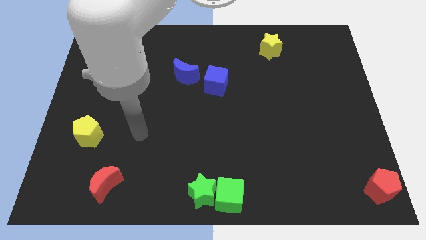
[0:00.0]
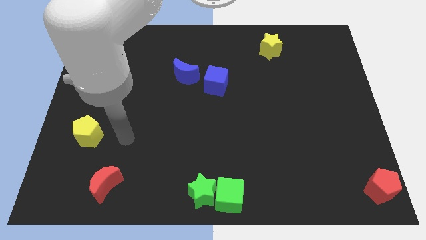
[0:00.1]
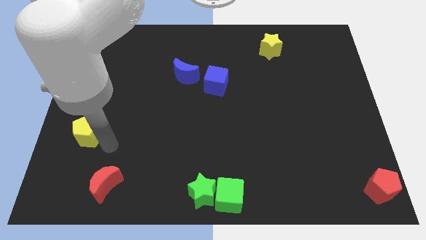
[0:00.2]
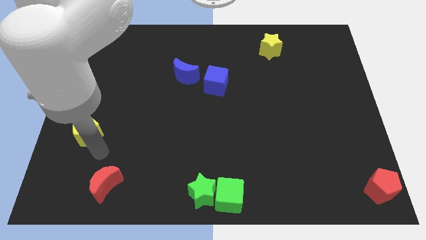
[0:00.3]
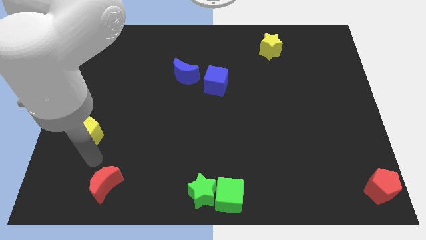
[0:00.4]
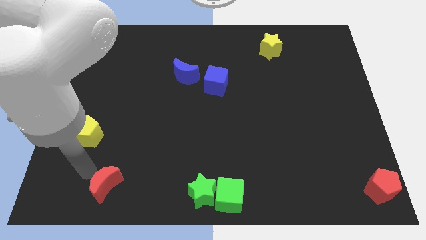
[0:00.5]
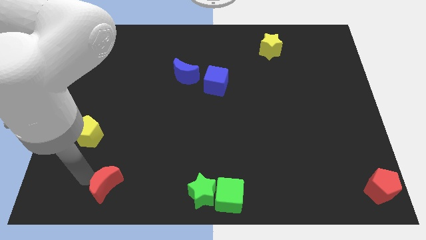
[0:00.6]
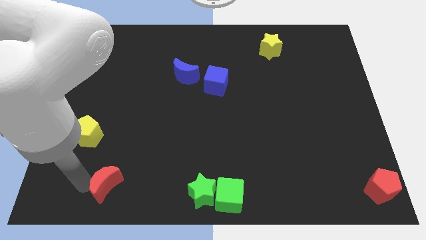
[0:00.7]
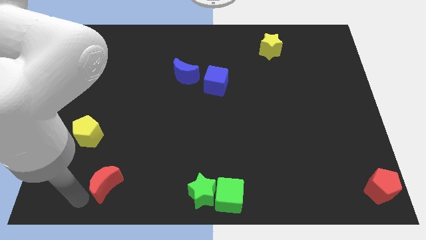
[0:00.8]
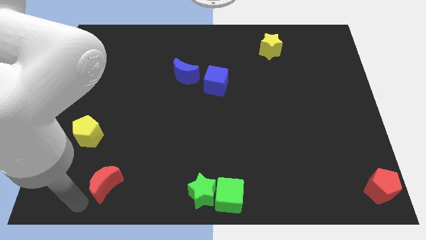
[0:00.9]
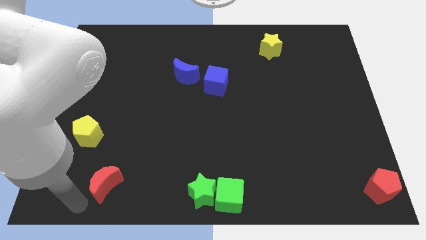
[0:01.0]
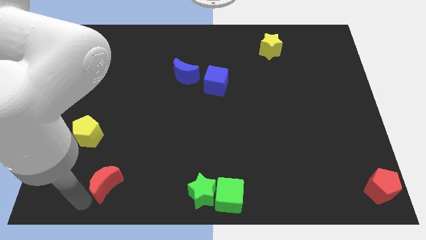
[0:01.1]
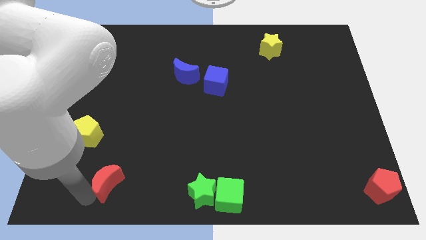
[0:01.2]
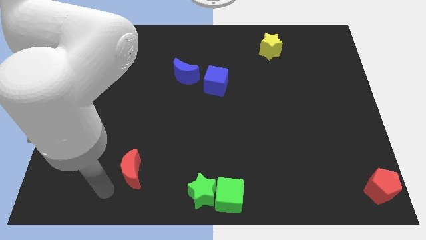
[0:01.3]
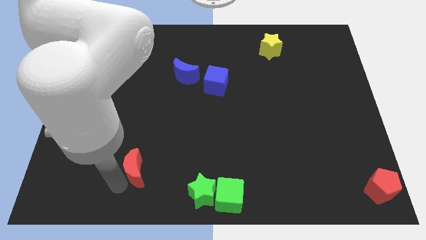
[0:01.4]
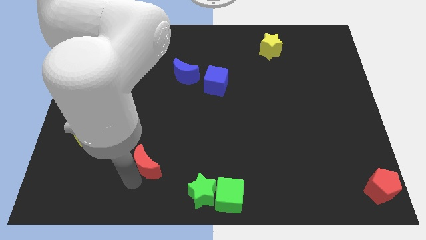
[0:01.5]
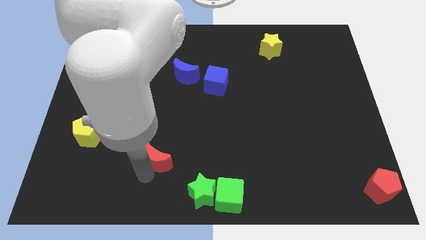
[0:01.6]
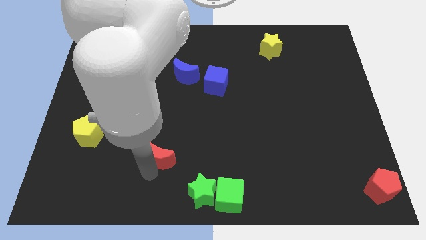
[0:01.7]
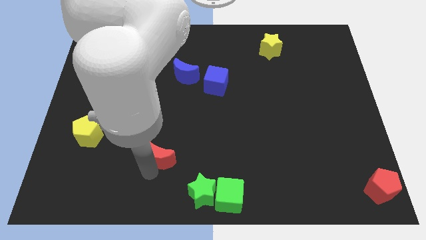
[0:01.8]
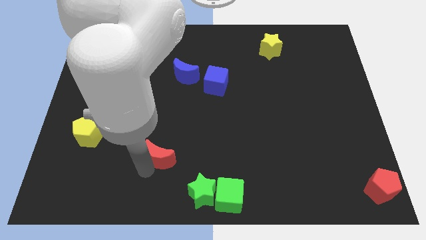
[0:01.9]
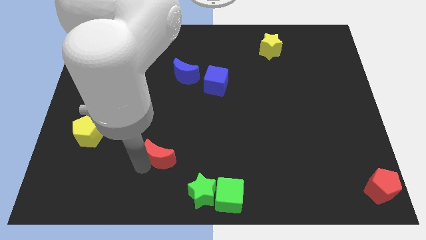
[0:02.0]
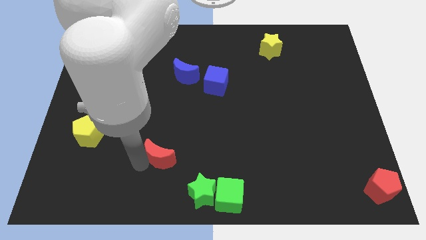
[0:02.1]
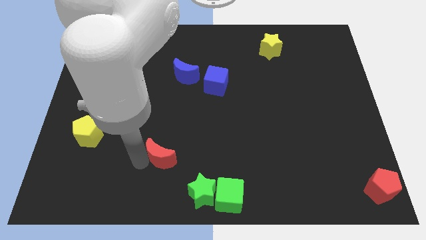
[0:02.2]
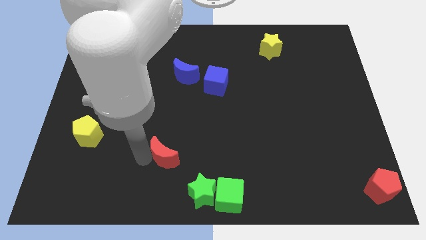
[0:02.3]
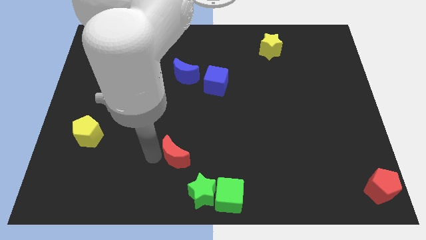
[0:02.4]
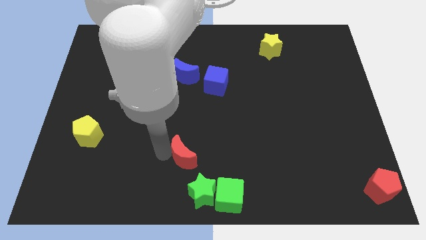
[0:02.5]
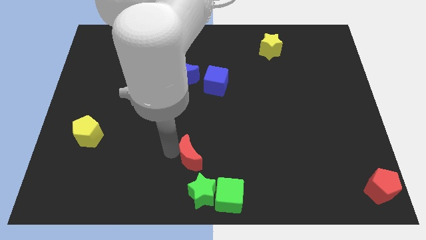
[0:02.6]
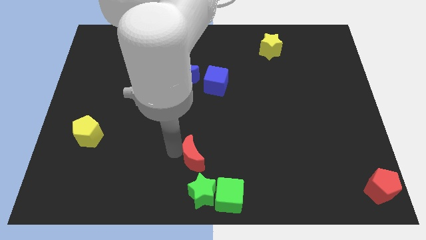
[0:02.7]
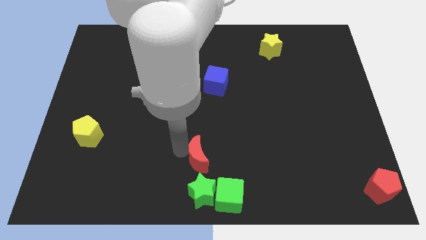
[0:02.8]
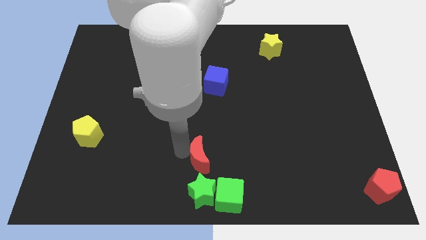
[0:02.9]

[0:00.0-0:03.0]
push red crescent above green star

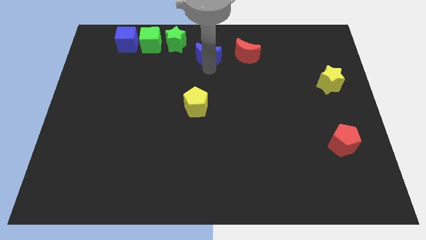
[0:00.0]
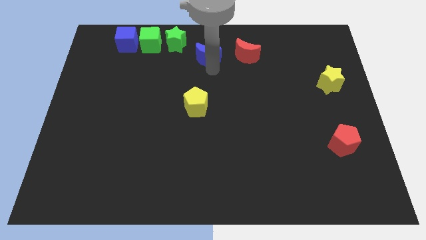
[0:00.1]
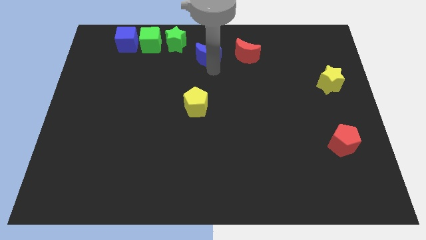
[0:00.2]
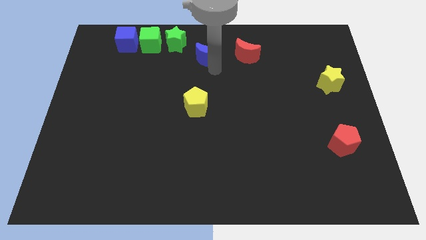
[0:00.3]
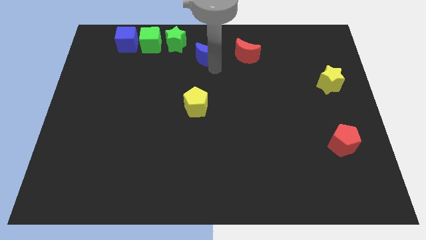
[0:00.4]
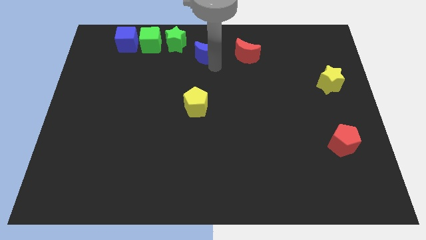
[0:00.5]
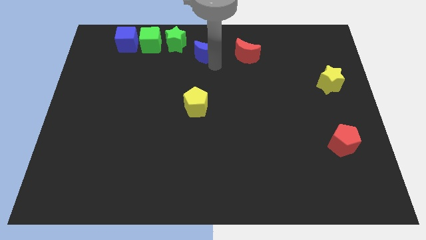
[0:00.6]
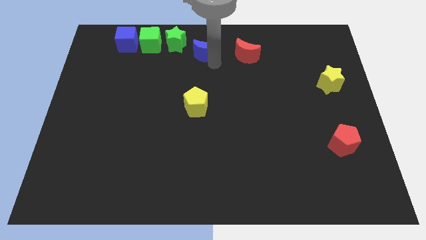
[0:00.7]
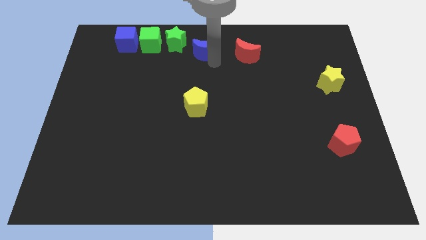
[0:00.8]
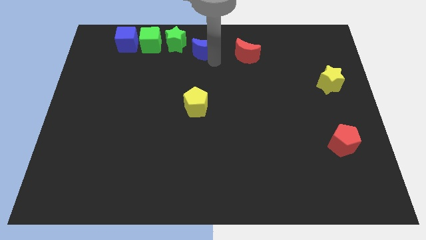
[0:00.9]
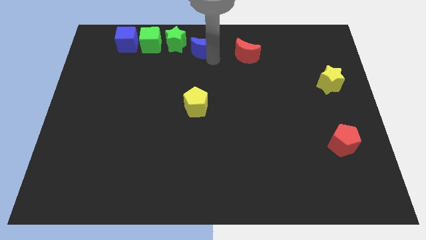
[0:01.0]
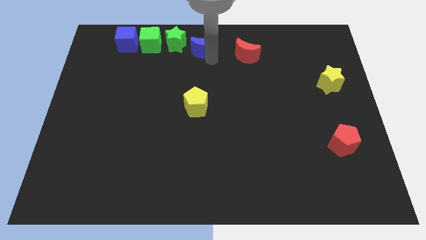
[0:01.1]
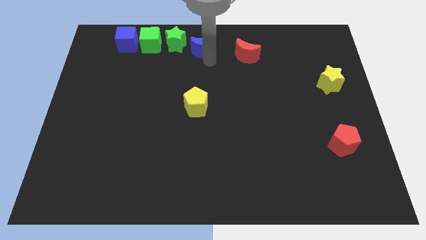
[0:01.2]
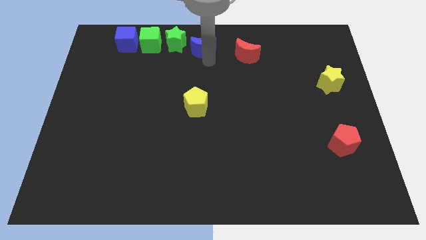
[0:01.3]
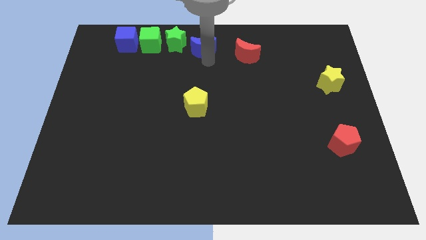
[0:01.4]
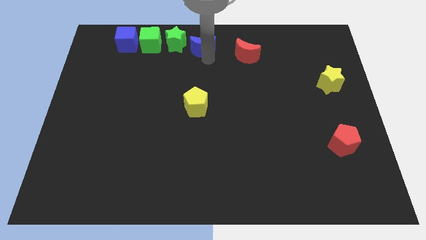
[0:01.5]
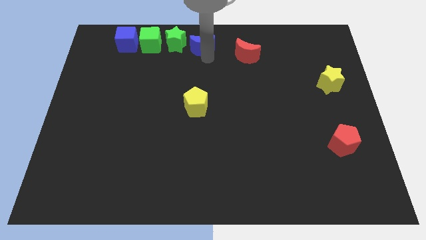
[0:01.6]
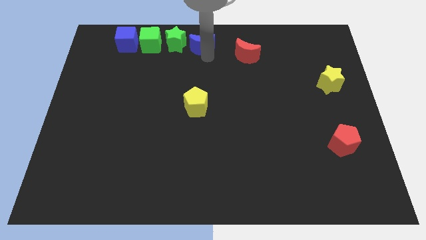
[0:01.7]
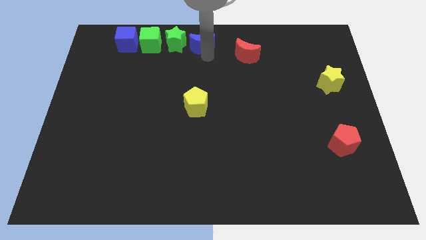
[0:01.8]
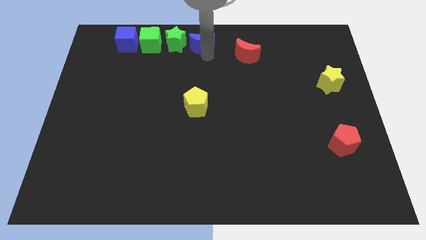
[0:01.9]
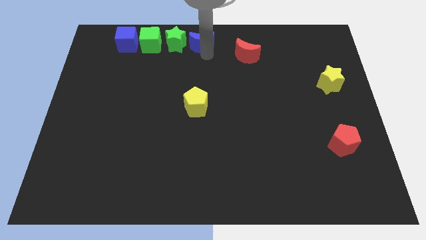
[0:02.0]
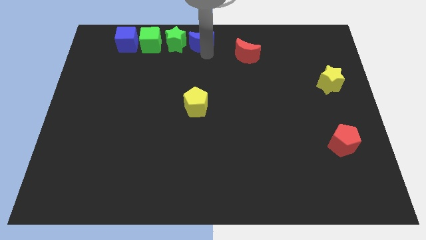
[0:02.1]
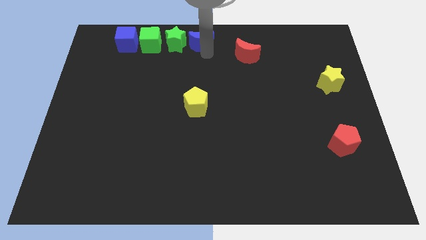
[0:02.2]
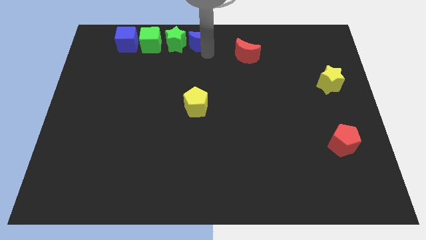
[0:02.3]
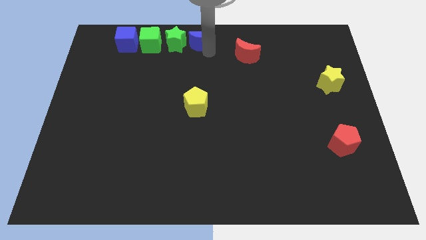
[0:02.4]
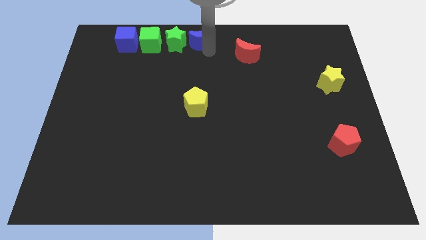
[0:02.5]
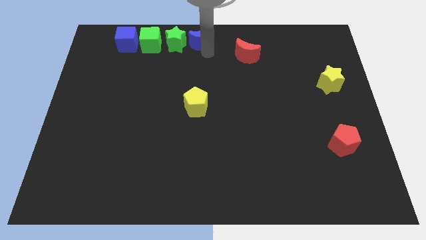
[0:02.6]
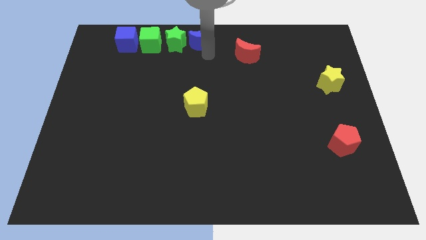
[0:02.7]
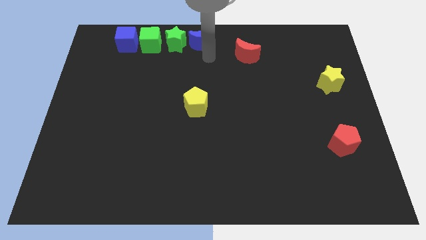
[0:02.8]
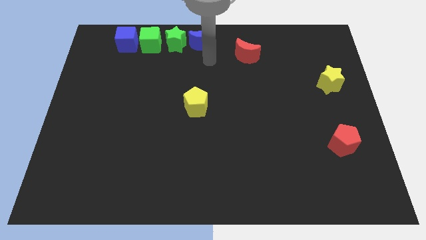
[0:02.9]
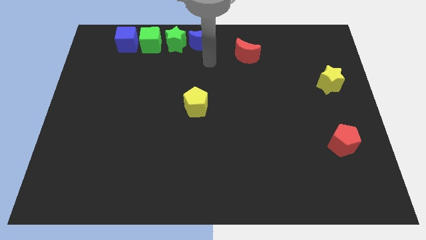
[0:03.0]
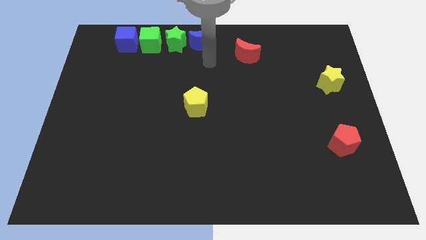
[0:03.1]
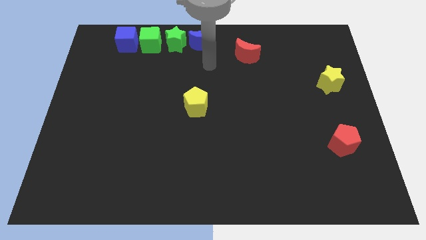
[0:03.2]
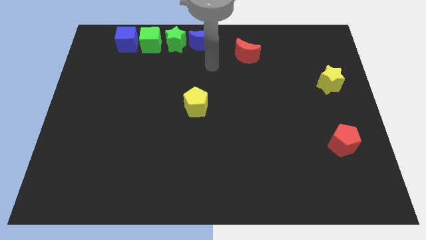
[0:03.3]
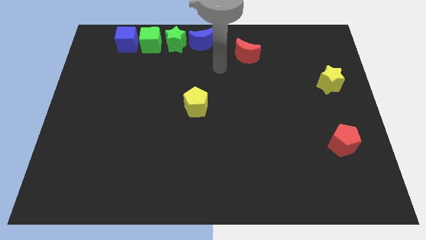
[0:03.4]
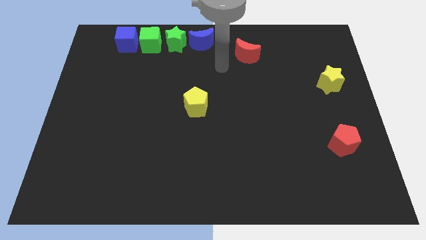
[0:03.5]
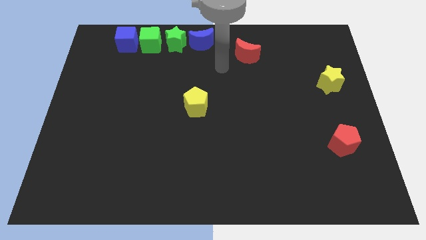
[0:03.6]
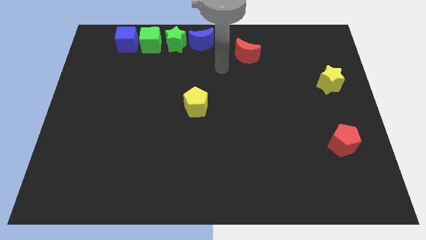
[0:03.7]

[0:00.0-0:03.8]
push the blue moon to the left of the green star

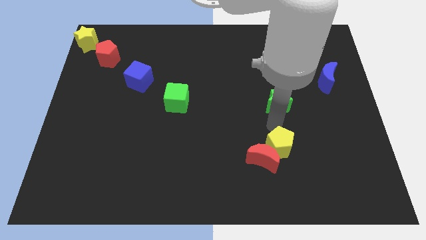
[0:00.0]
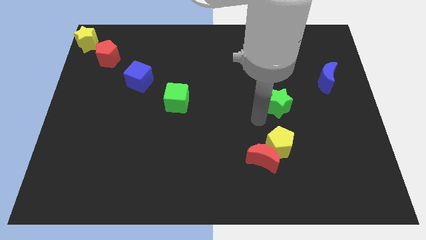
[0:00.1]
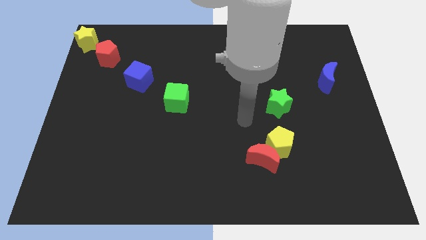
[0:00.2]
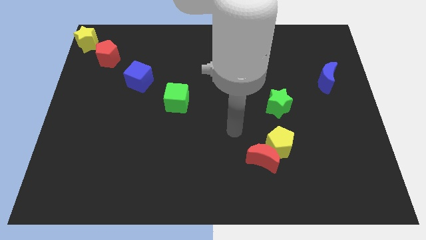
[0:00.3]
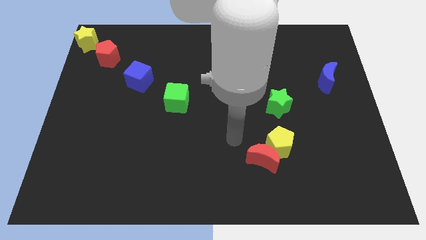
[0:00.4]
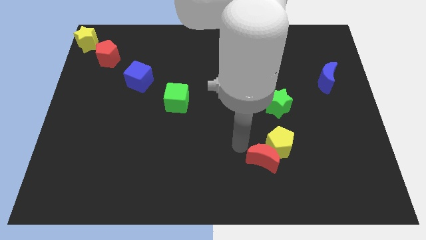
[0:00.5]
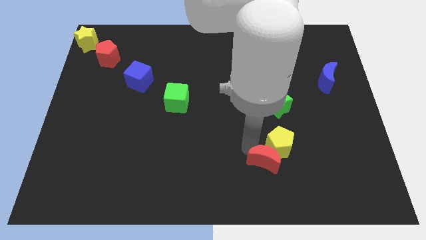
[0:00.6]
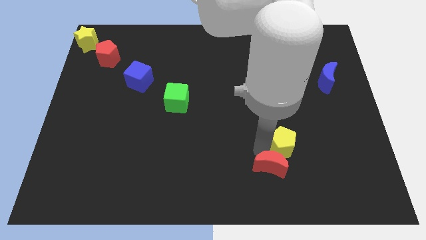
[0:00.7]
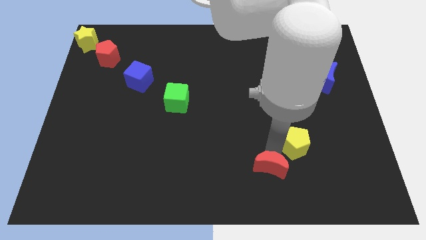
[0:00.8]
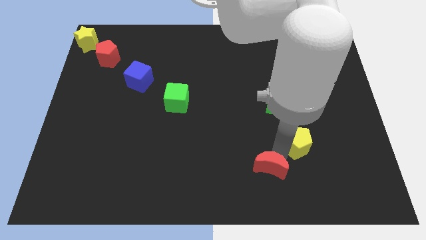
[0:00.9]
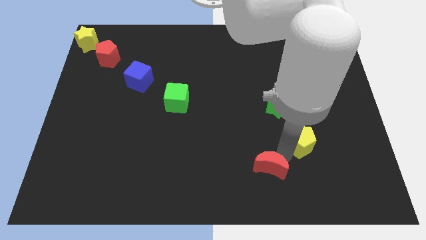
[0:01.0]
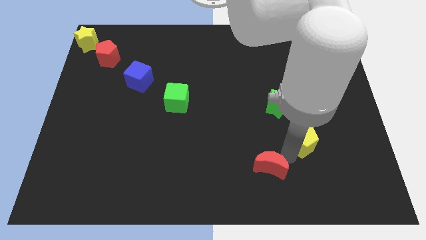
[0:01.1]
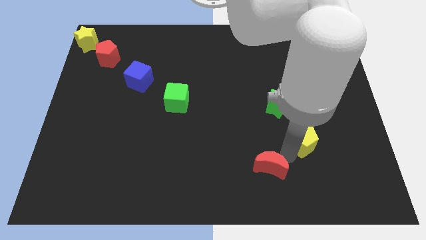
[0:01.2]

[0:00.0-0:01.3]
move the yellow pentagon slightly to the right side of the board

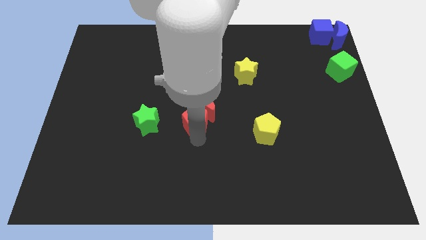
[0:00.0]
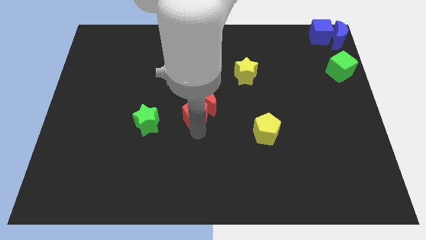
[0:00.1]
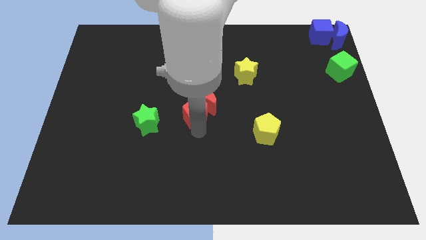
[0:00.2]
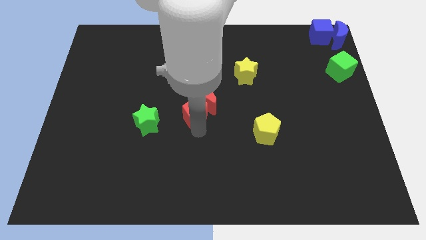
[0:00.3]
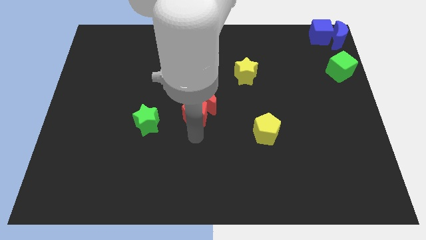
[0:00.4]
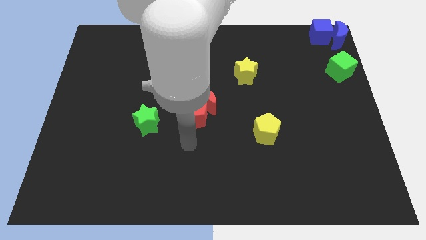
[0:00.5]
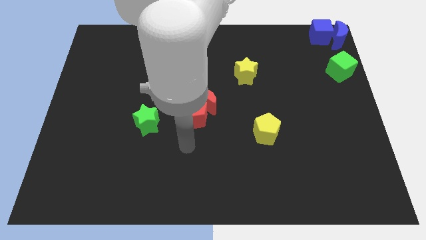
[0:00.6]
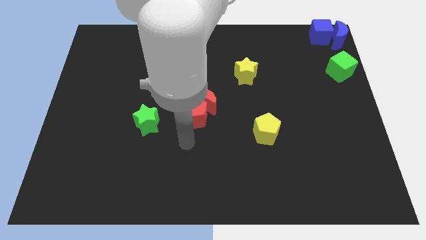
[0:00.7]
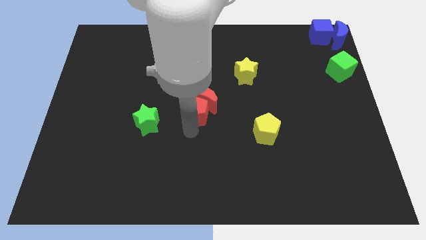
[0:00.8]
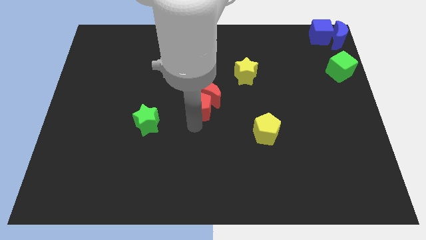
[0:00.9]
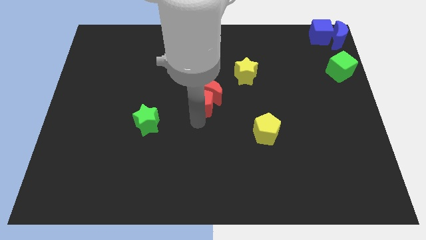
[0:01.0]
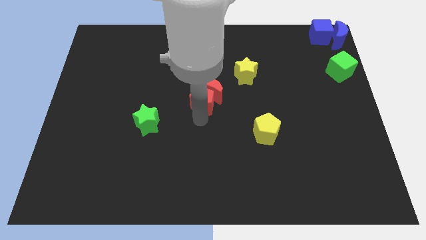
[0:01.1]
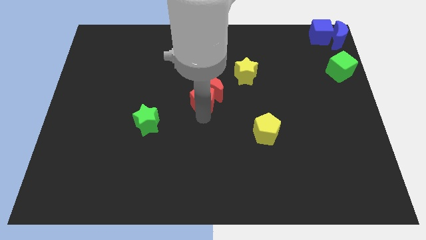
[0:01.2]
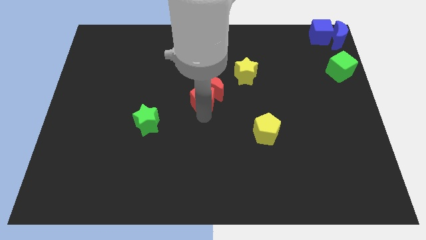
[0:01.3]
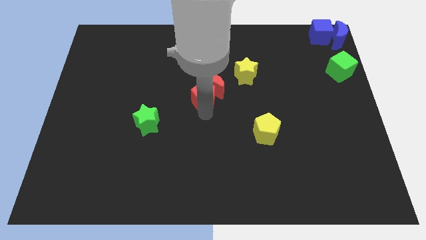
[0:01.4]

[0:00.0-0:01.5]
move the red pentagon and red moon to the center of the board
